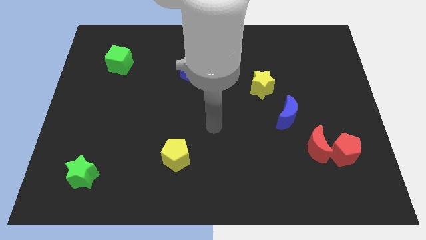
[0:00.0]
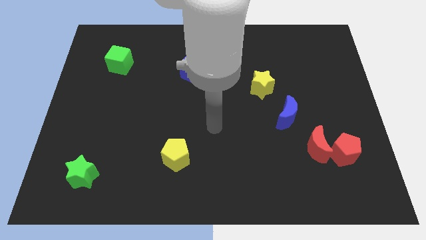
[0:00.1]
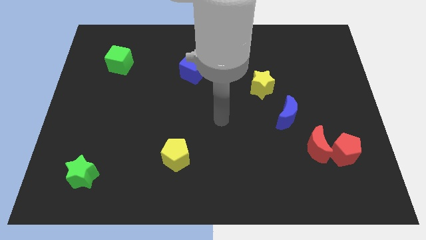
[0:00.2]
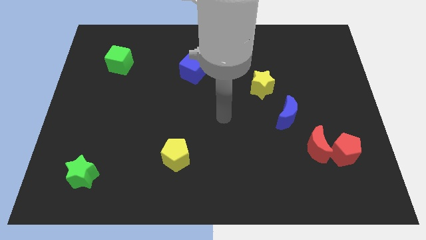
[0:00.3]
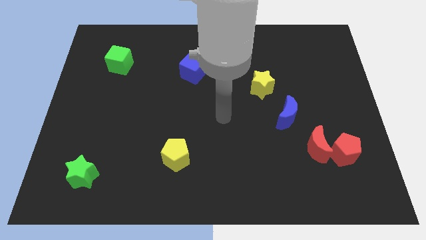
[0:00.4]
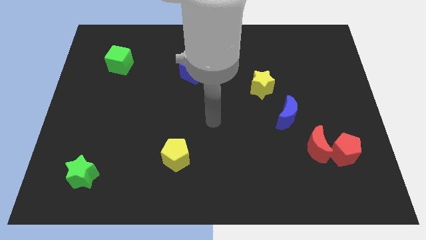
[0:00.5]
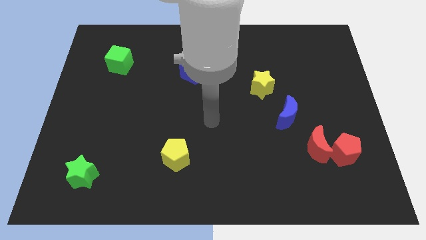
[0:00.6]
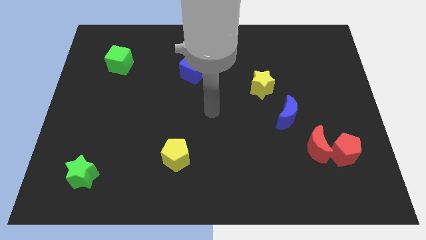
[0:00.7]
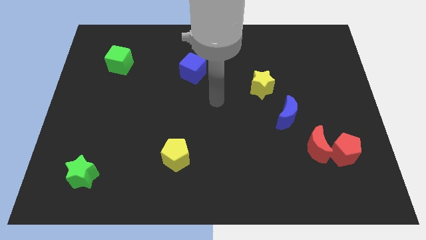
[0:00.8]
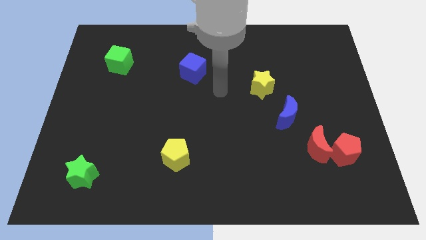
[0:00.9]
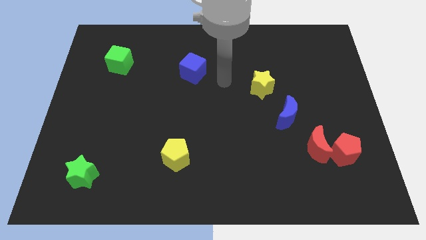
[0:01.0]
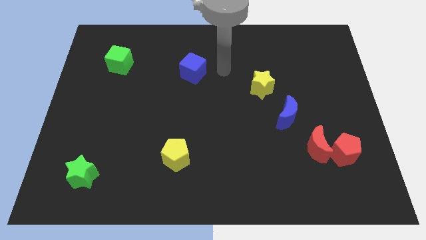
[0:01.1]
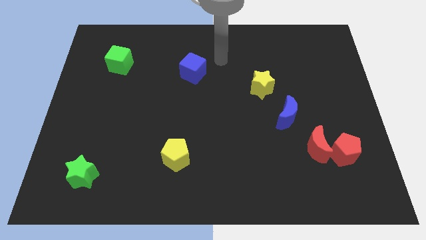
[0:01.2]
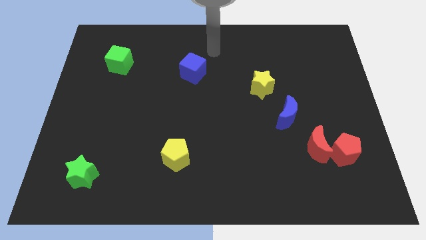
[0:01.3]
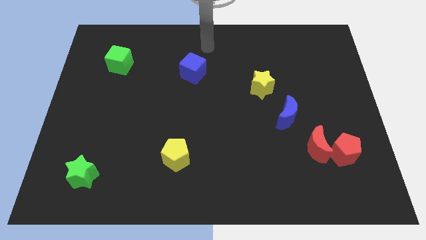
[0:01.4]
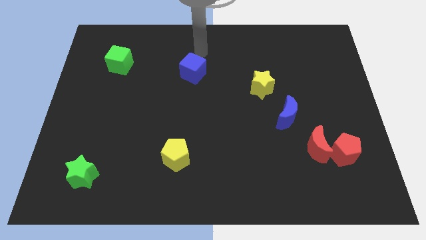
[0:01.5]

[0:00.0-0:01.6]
place the arm above the blue cube

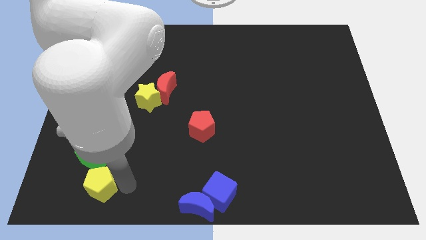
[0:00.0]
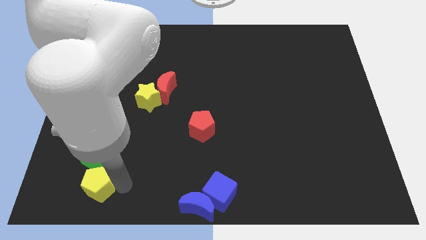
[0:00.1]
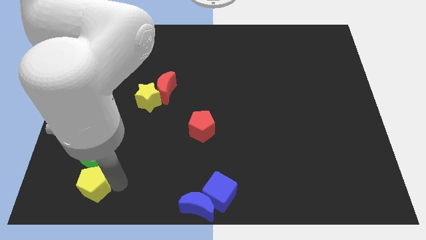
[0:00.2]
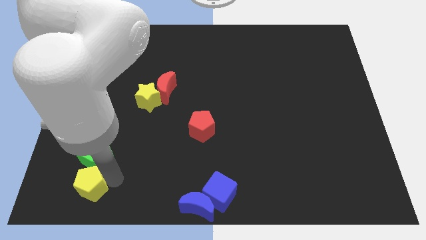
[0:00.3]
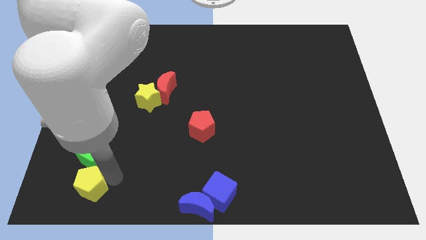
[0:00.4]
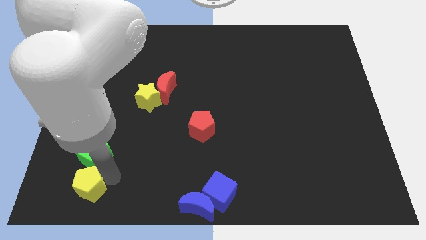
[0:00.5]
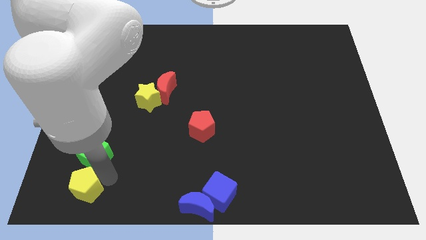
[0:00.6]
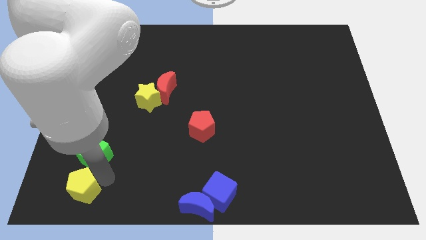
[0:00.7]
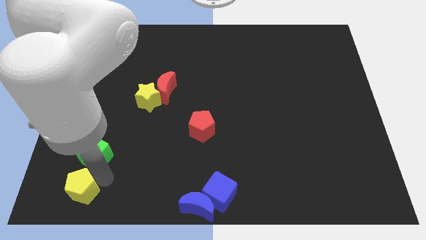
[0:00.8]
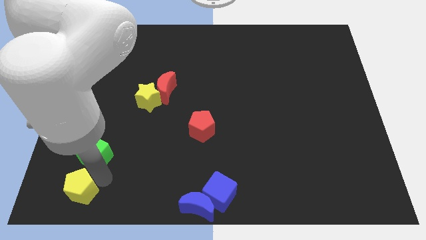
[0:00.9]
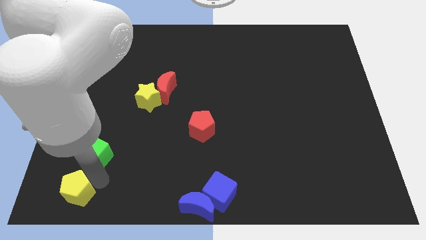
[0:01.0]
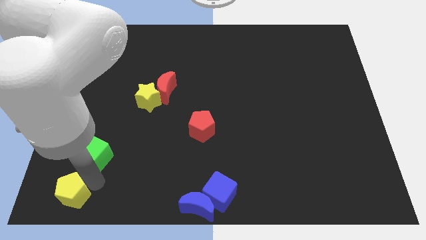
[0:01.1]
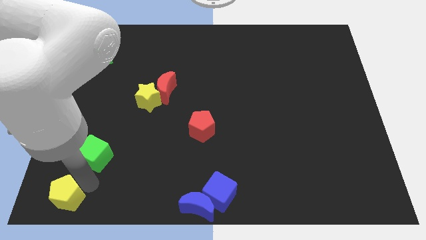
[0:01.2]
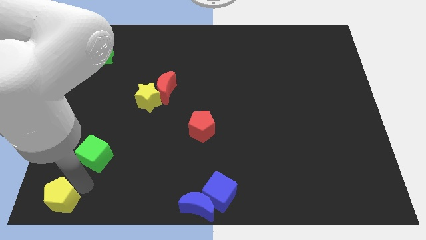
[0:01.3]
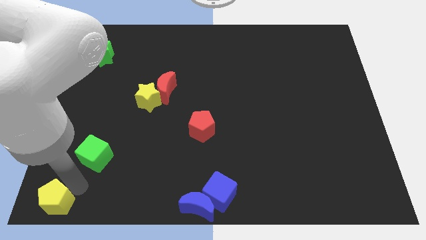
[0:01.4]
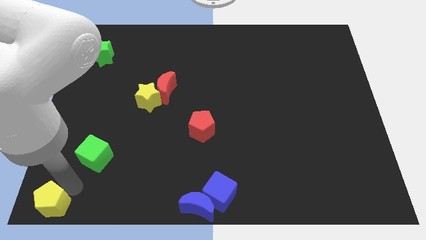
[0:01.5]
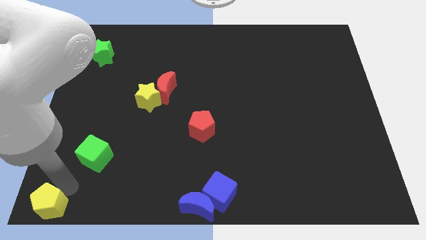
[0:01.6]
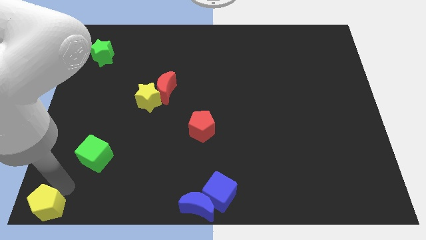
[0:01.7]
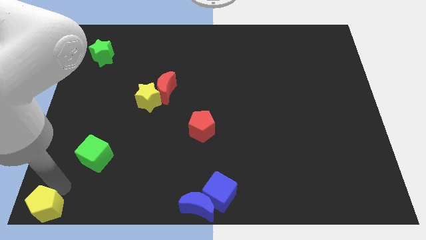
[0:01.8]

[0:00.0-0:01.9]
move the yellow pentagon to the bottom left corner of the board

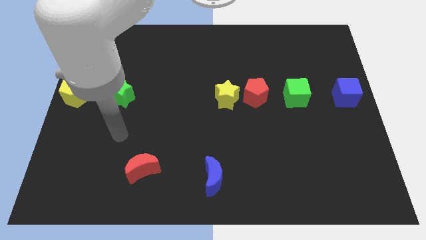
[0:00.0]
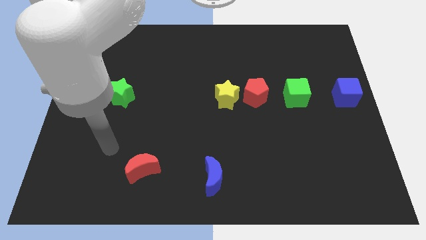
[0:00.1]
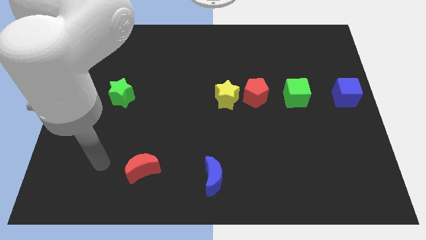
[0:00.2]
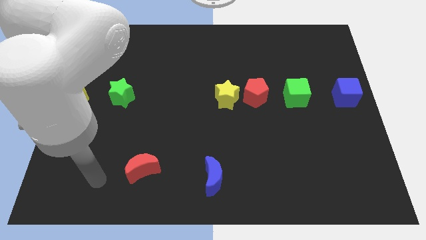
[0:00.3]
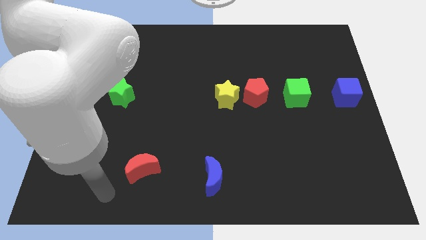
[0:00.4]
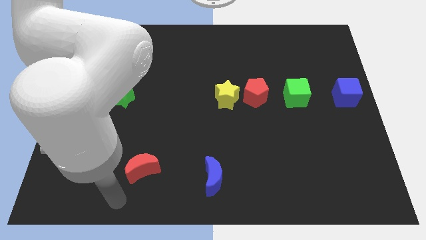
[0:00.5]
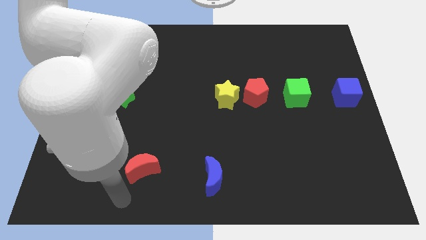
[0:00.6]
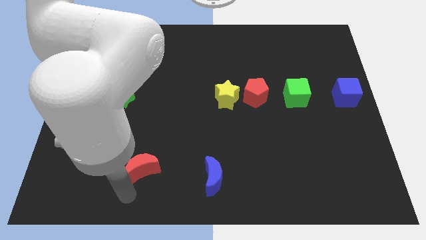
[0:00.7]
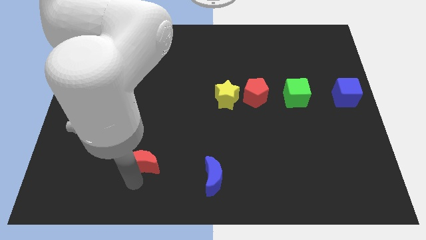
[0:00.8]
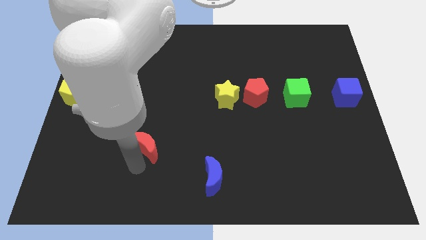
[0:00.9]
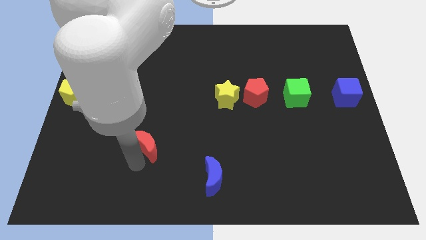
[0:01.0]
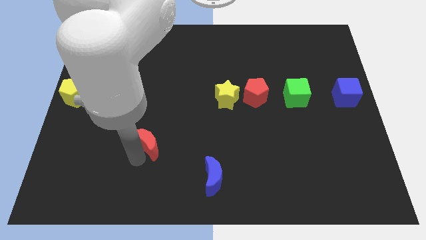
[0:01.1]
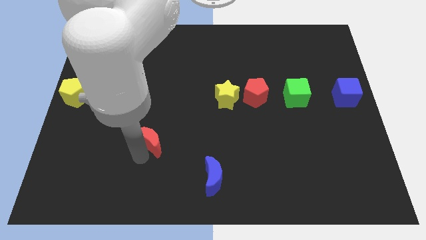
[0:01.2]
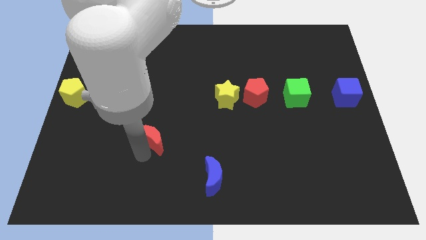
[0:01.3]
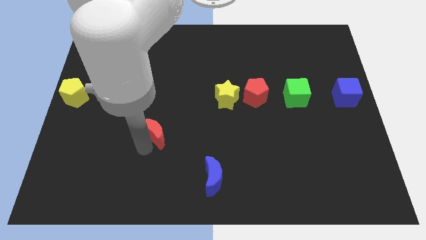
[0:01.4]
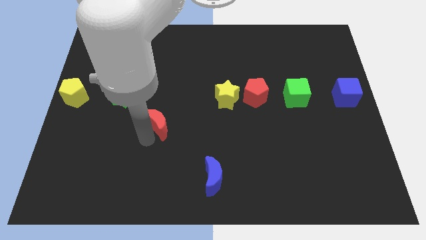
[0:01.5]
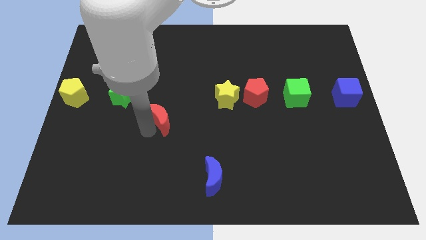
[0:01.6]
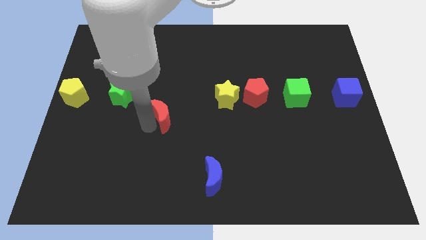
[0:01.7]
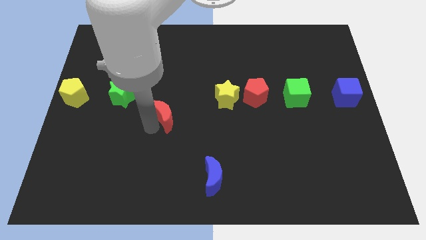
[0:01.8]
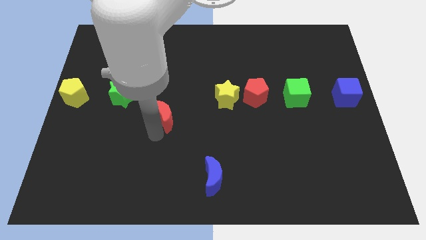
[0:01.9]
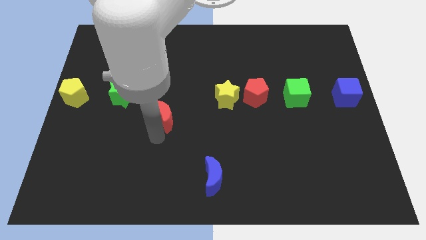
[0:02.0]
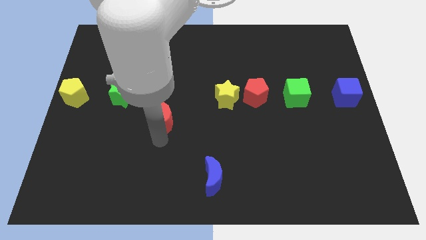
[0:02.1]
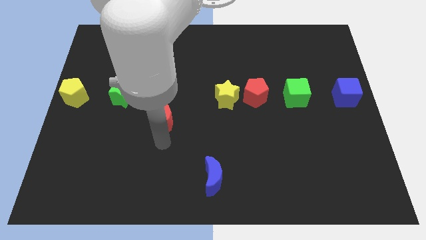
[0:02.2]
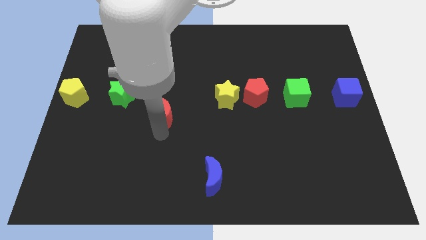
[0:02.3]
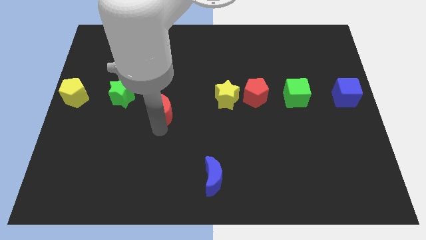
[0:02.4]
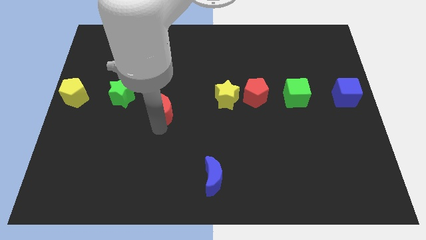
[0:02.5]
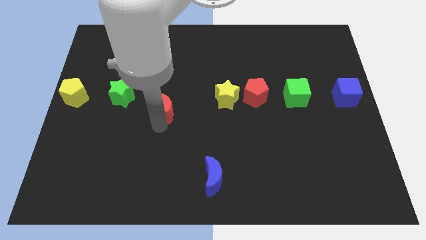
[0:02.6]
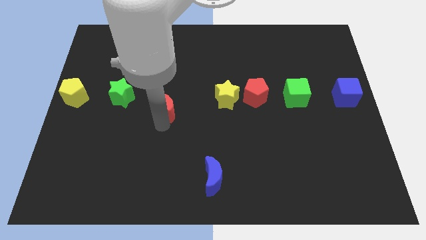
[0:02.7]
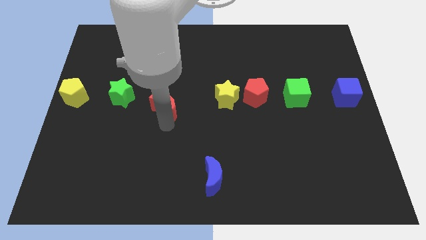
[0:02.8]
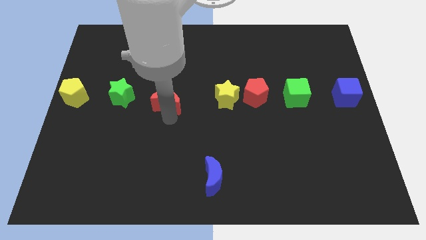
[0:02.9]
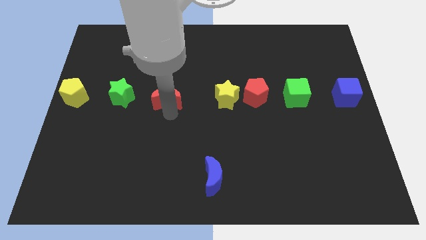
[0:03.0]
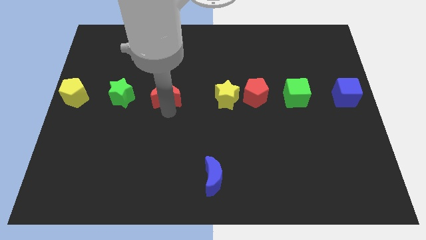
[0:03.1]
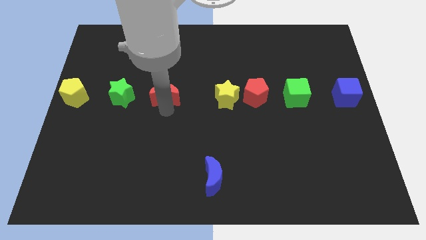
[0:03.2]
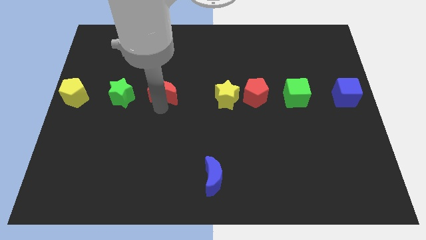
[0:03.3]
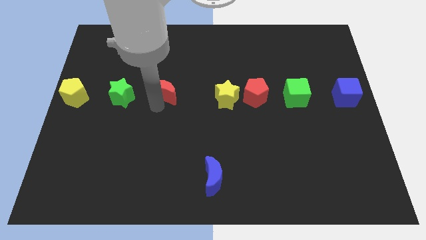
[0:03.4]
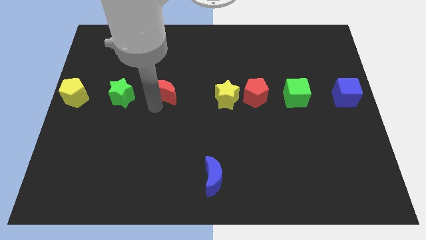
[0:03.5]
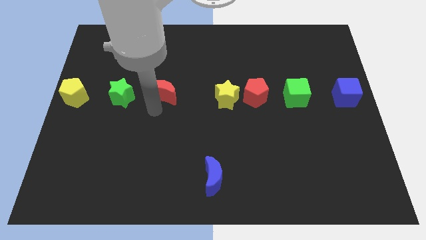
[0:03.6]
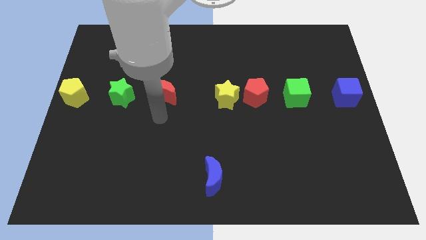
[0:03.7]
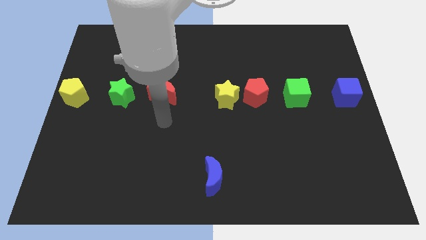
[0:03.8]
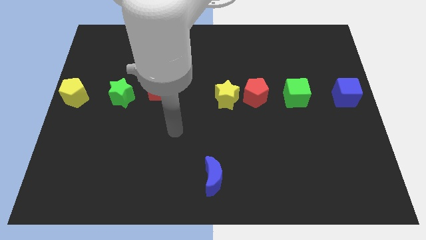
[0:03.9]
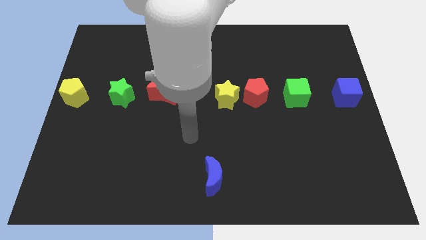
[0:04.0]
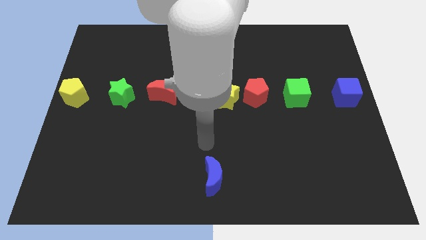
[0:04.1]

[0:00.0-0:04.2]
push the red crescent towards green star

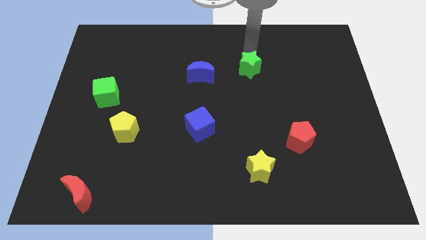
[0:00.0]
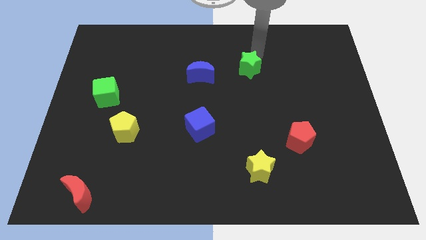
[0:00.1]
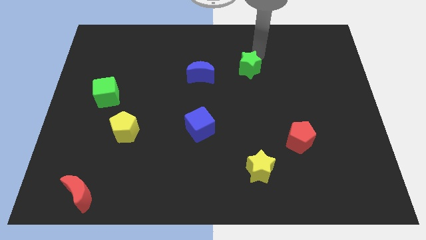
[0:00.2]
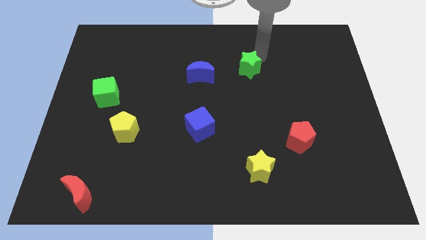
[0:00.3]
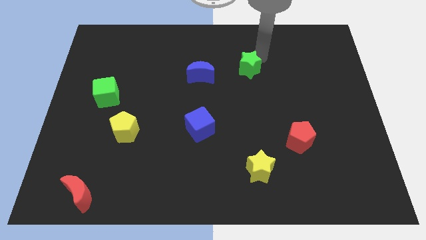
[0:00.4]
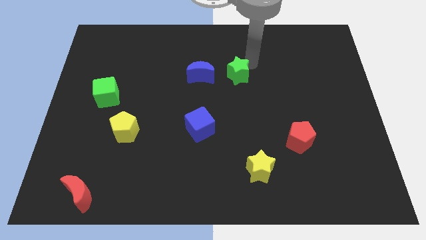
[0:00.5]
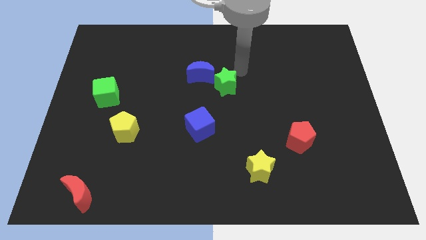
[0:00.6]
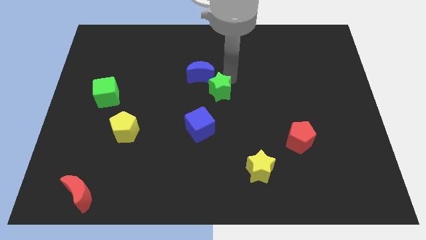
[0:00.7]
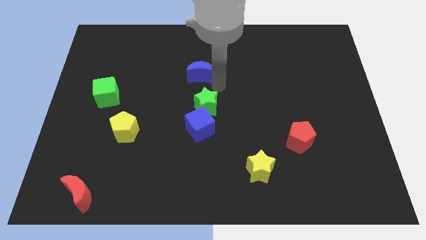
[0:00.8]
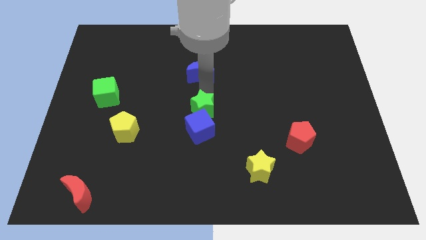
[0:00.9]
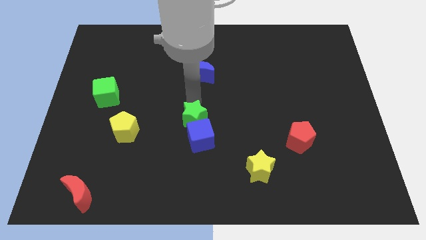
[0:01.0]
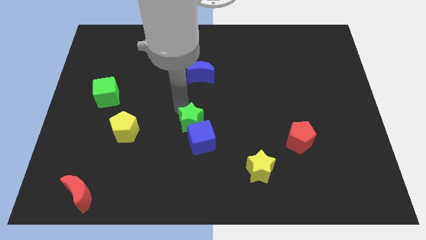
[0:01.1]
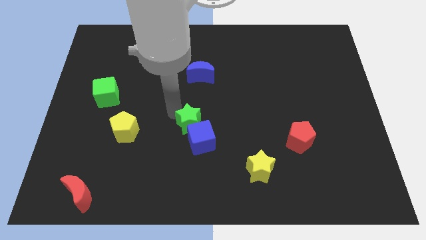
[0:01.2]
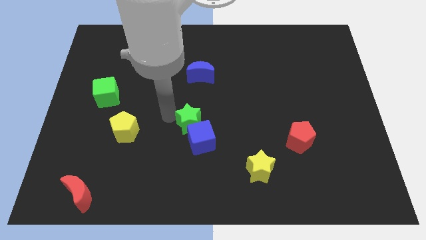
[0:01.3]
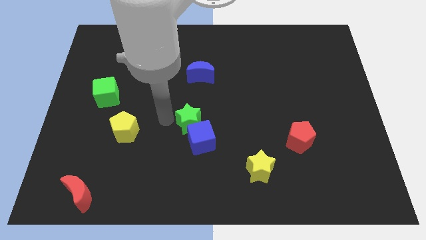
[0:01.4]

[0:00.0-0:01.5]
move green star above blue cube
